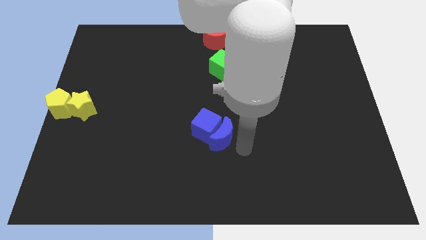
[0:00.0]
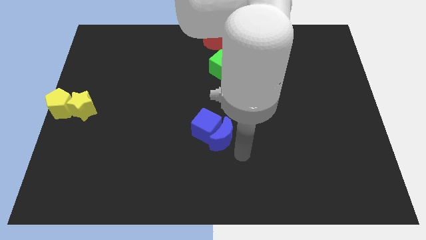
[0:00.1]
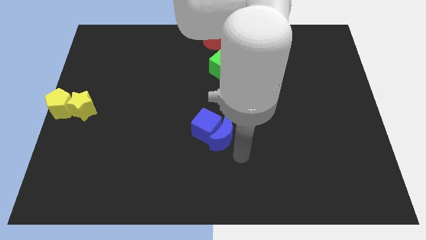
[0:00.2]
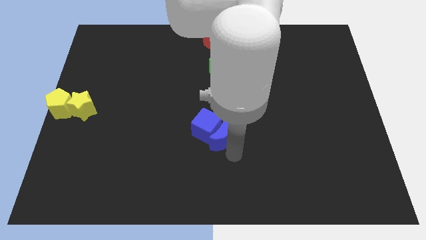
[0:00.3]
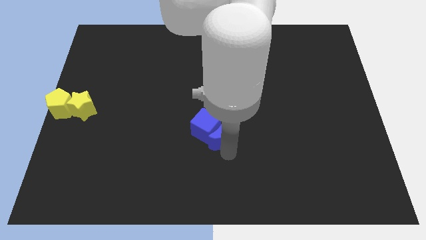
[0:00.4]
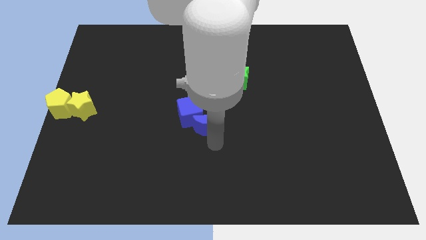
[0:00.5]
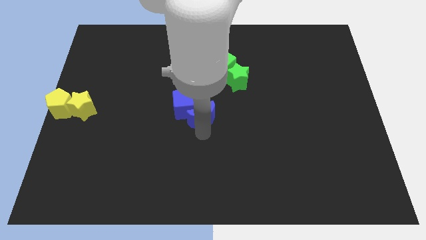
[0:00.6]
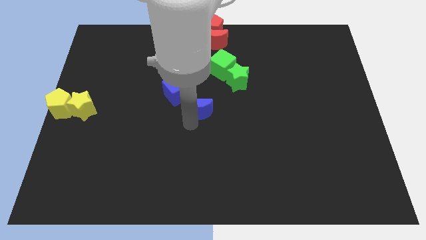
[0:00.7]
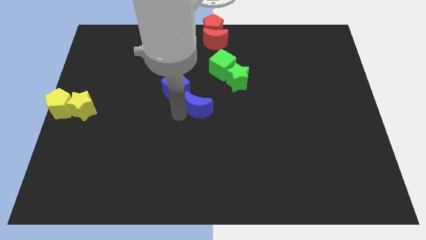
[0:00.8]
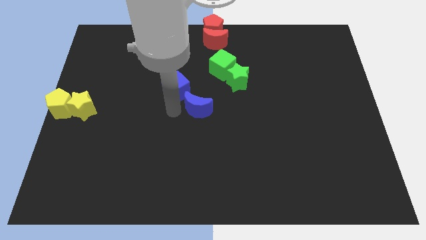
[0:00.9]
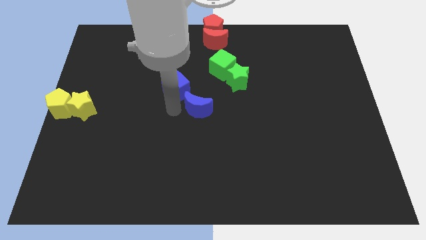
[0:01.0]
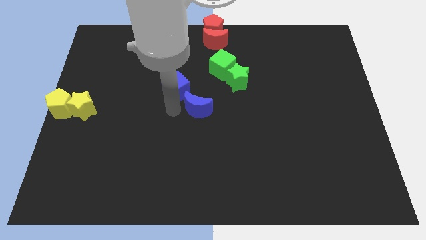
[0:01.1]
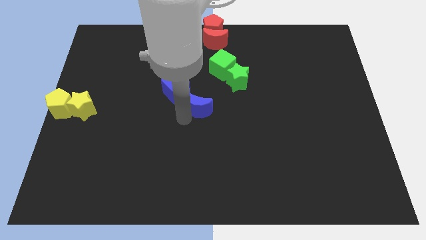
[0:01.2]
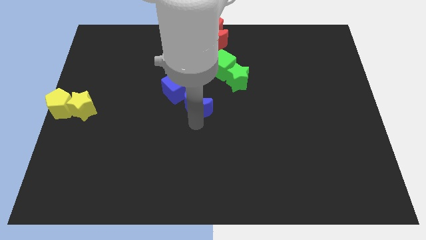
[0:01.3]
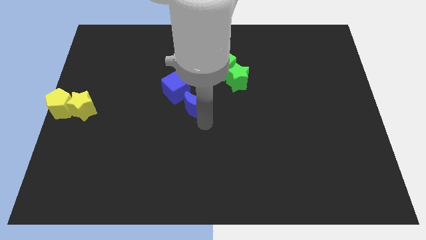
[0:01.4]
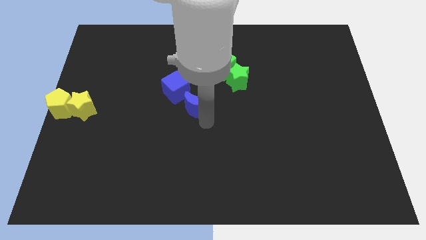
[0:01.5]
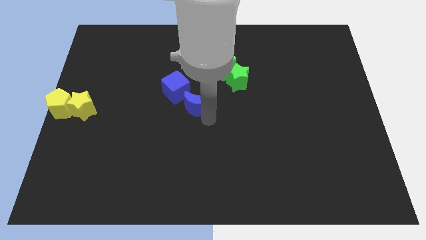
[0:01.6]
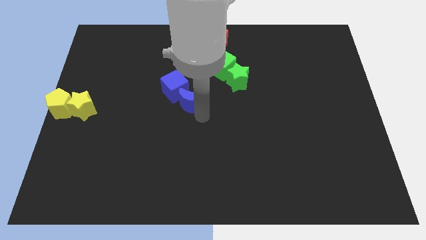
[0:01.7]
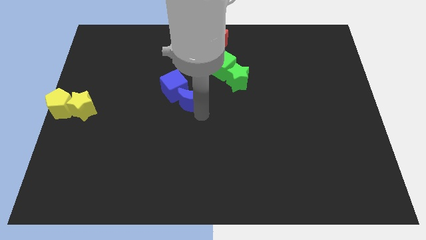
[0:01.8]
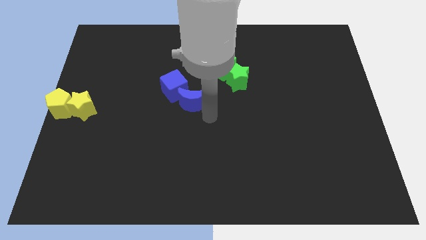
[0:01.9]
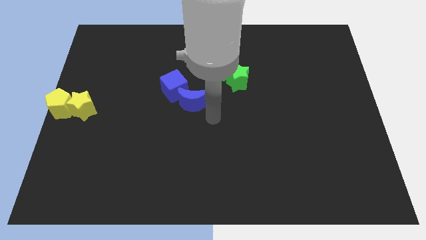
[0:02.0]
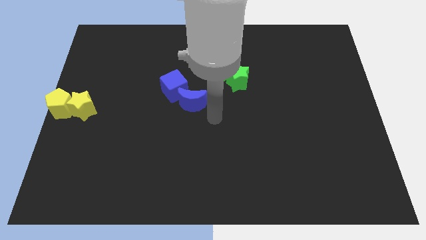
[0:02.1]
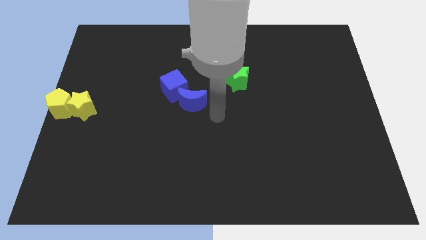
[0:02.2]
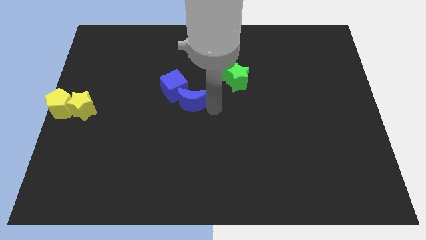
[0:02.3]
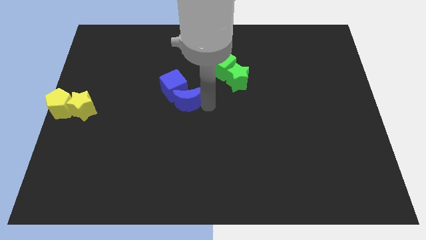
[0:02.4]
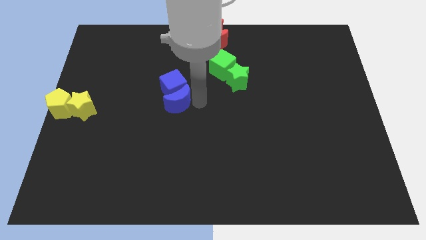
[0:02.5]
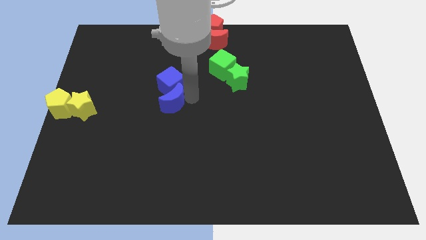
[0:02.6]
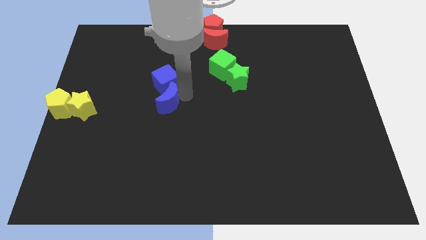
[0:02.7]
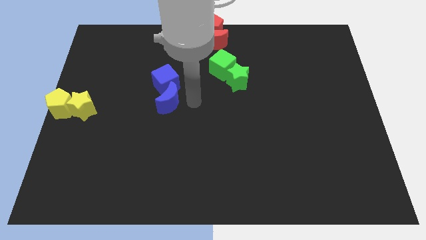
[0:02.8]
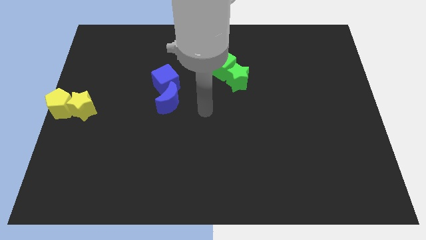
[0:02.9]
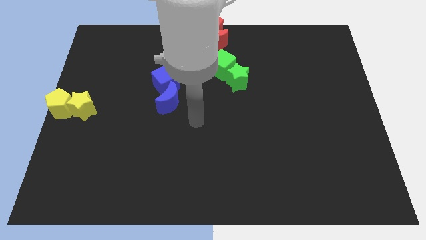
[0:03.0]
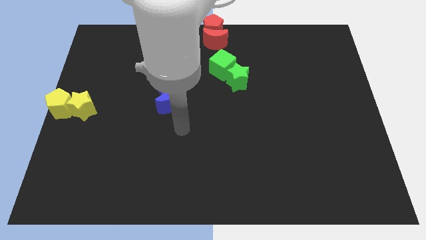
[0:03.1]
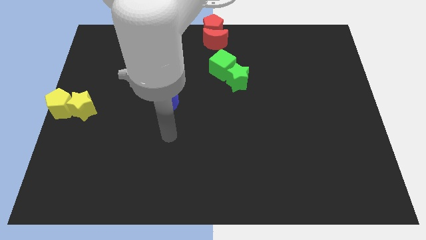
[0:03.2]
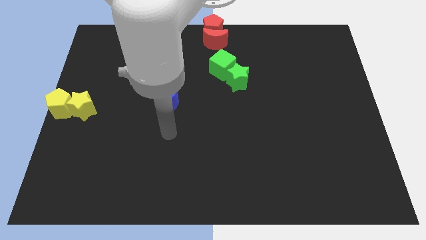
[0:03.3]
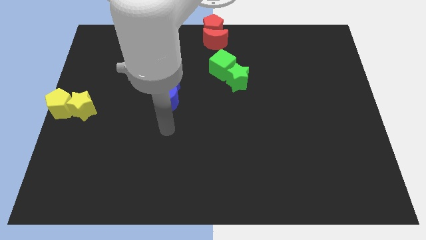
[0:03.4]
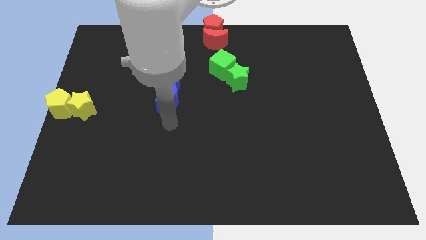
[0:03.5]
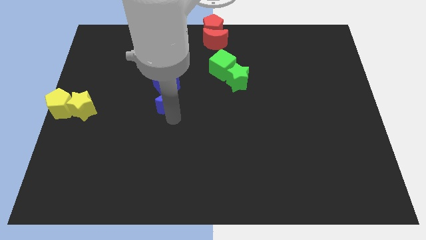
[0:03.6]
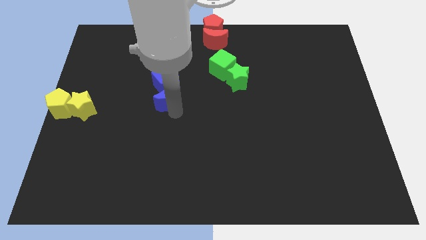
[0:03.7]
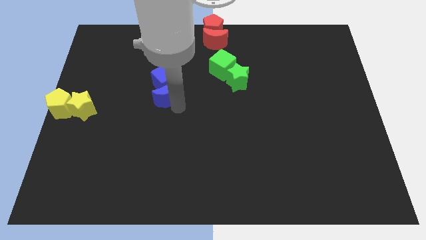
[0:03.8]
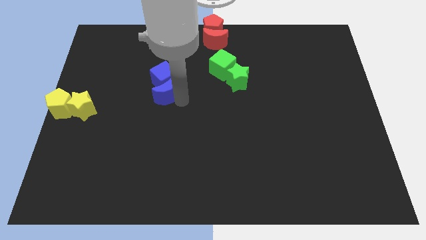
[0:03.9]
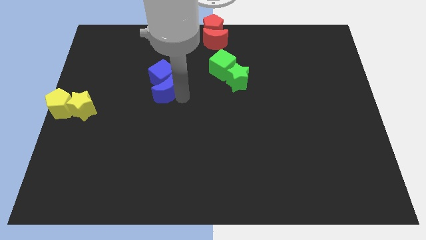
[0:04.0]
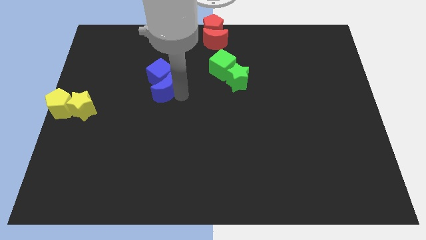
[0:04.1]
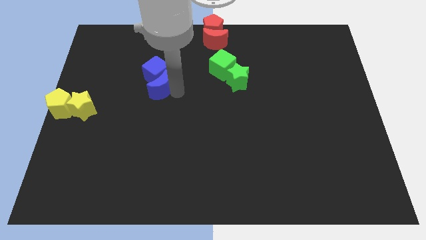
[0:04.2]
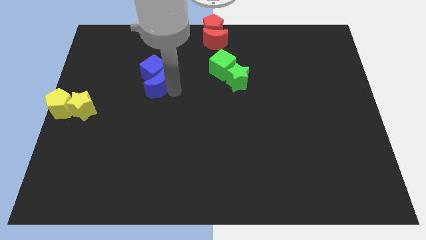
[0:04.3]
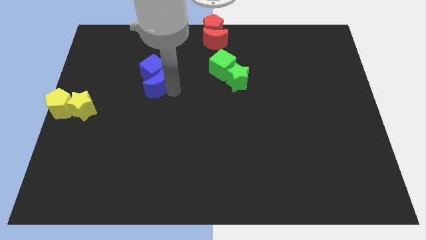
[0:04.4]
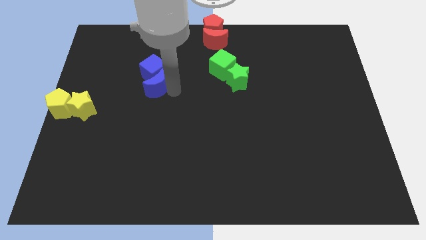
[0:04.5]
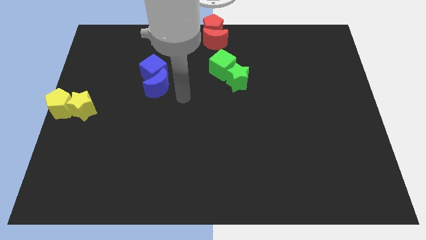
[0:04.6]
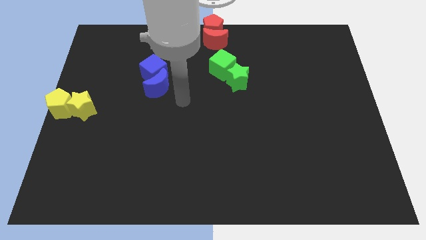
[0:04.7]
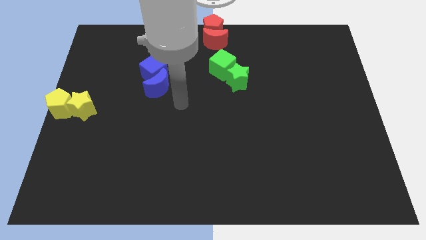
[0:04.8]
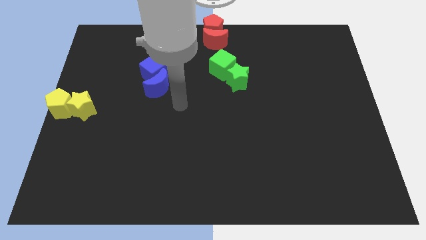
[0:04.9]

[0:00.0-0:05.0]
push the blue crescent along with the blue cube parallel to the green blocks

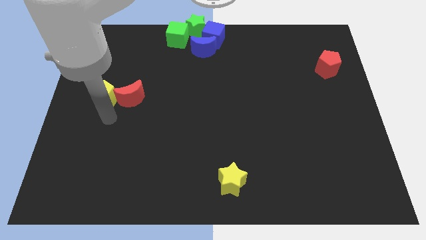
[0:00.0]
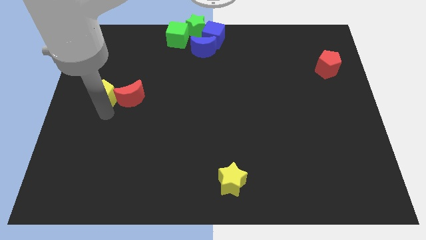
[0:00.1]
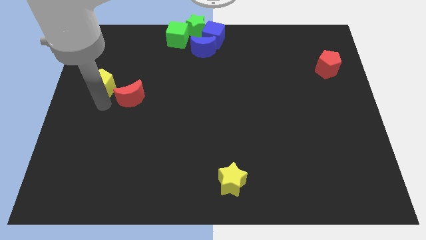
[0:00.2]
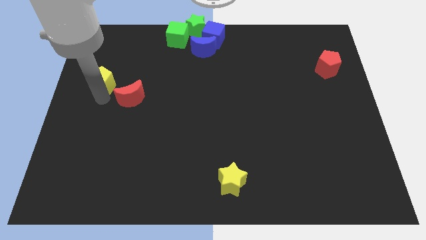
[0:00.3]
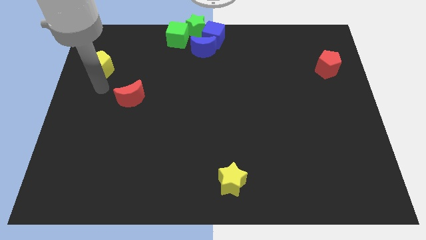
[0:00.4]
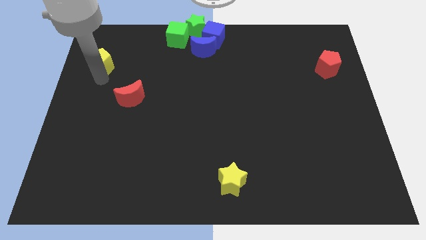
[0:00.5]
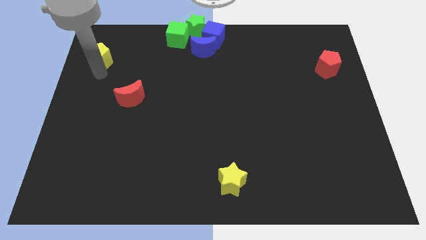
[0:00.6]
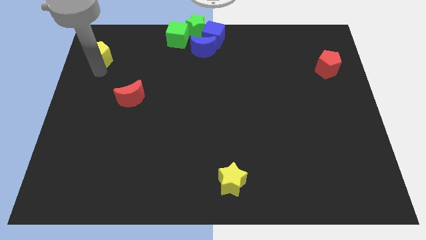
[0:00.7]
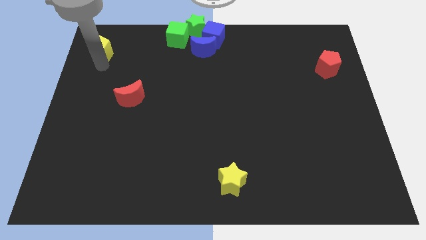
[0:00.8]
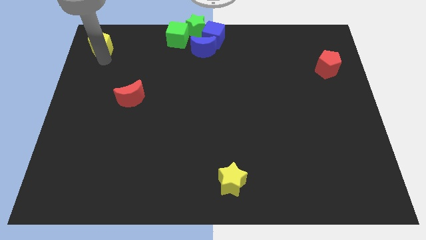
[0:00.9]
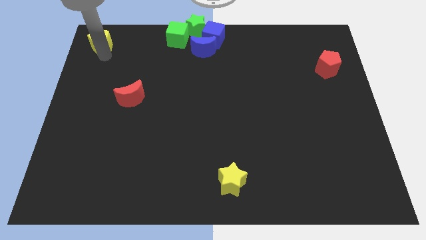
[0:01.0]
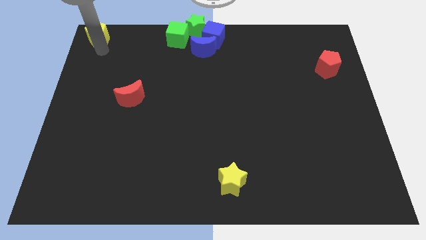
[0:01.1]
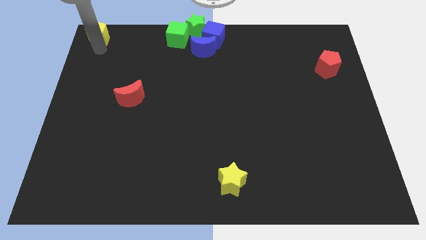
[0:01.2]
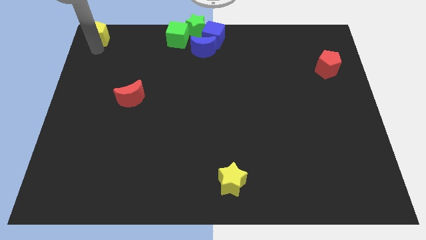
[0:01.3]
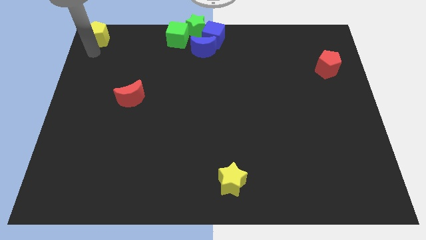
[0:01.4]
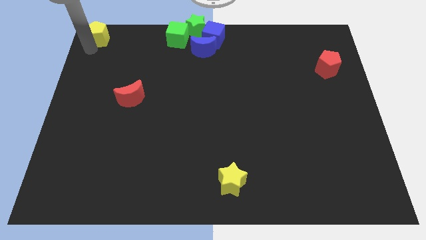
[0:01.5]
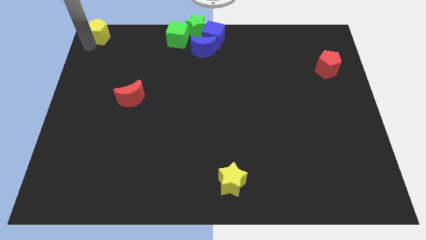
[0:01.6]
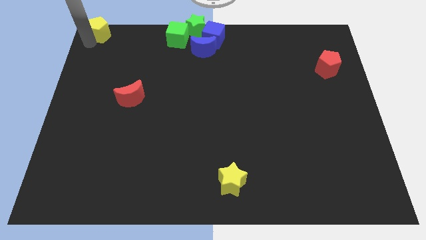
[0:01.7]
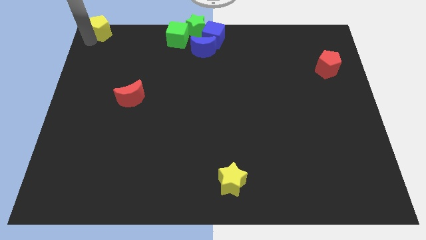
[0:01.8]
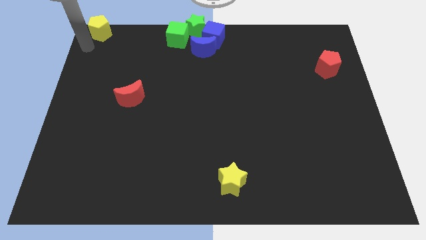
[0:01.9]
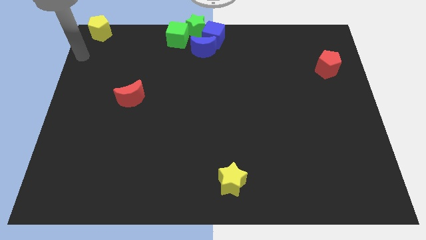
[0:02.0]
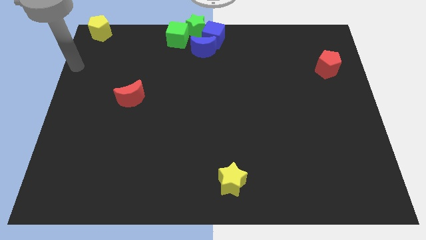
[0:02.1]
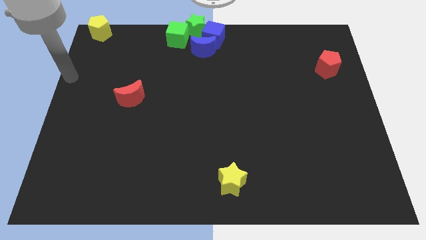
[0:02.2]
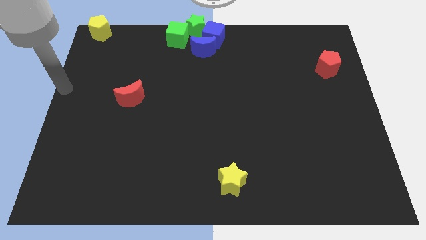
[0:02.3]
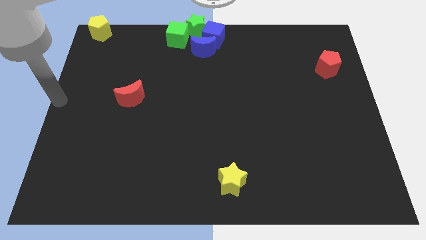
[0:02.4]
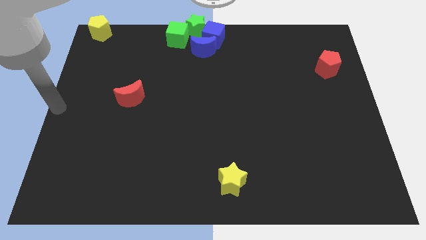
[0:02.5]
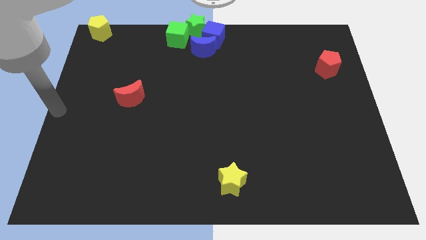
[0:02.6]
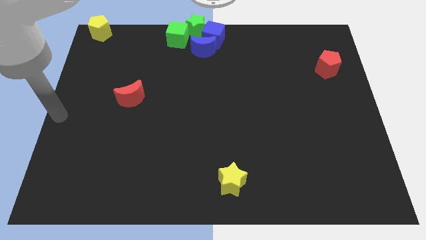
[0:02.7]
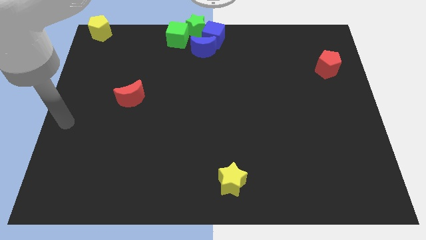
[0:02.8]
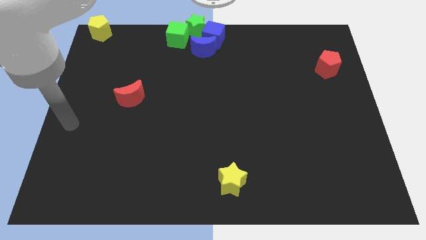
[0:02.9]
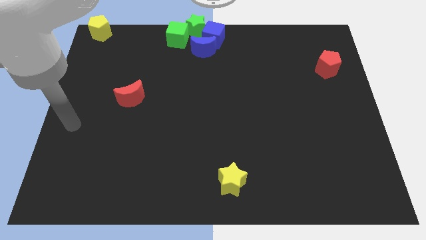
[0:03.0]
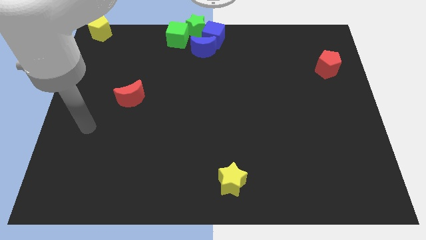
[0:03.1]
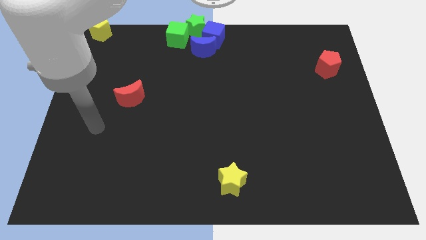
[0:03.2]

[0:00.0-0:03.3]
place the yellow pentagon to the top left corner of the board

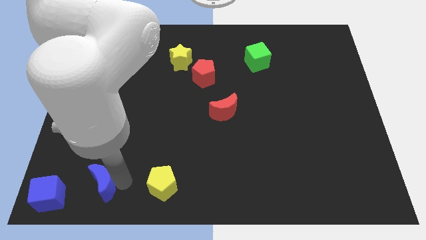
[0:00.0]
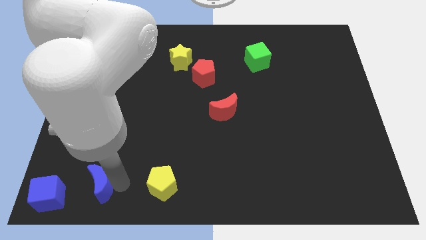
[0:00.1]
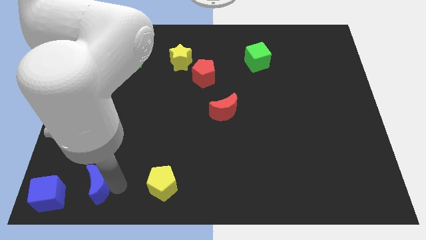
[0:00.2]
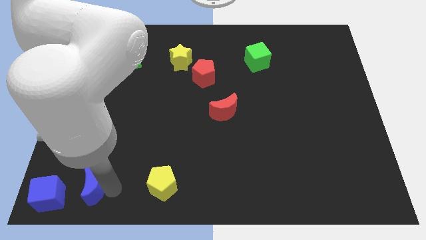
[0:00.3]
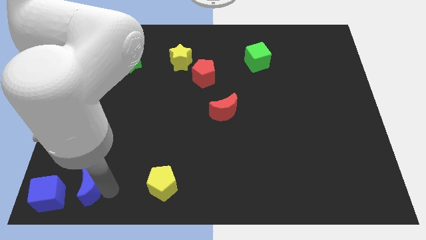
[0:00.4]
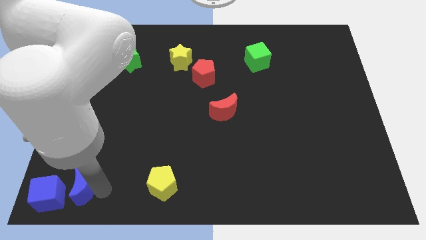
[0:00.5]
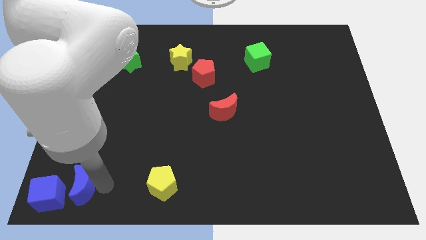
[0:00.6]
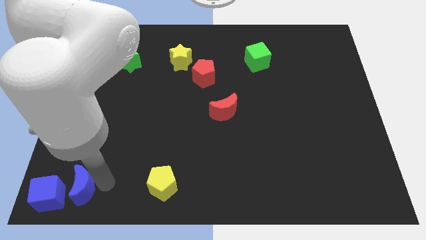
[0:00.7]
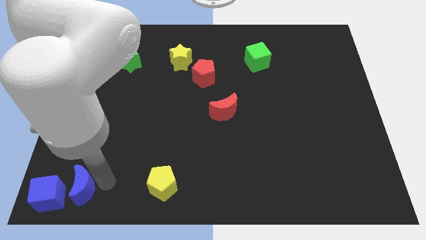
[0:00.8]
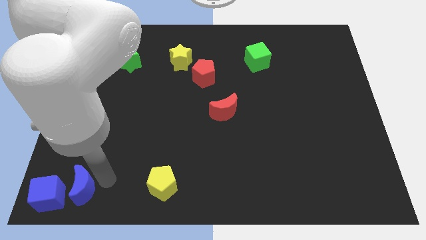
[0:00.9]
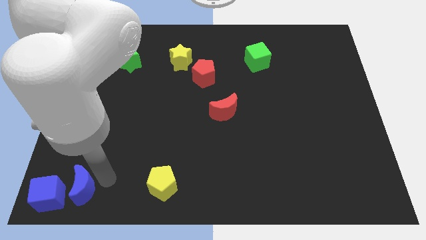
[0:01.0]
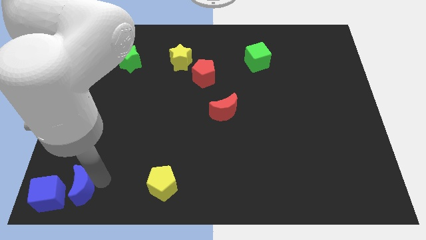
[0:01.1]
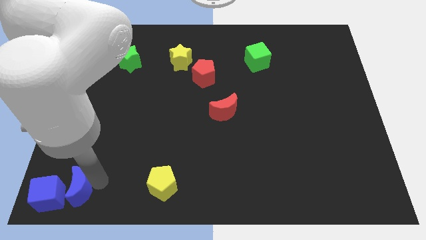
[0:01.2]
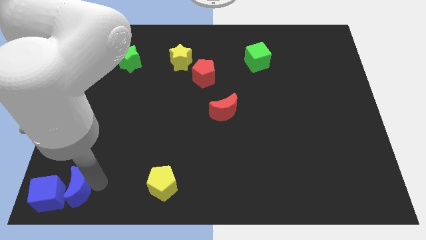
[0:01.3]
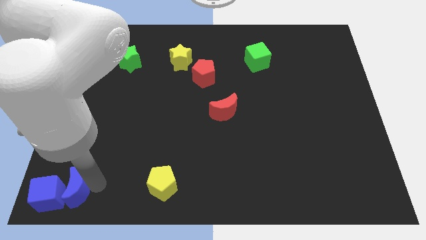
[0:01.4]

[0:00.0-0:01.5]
place blue crescent beside blue cube
